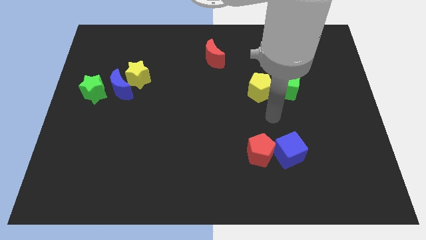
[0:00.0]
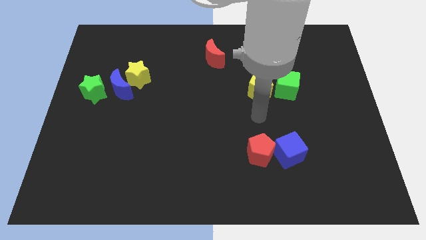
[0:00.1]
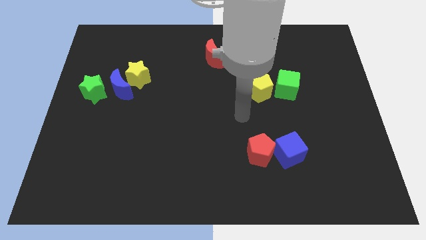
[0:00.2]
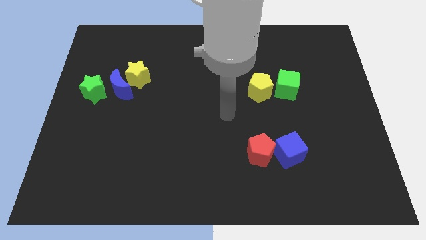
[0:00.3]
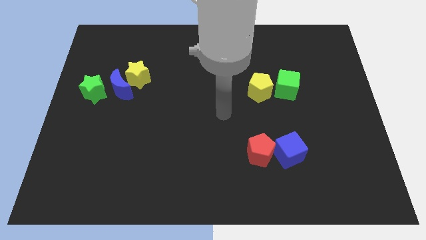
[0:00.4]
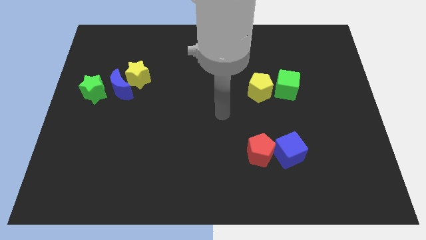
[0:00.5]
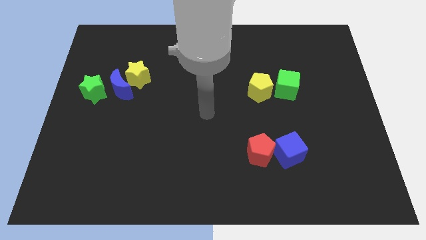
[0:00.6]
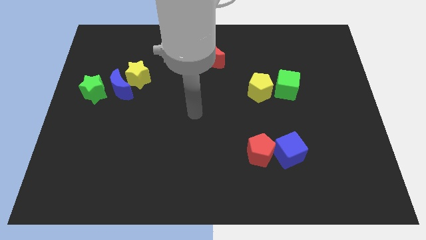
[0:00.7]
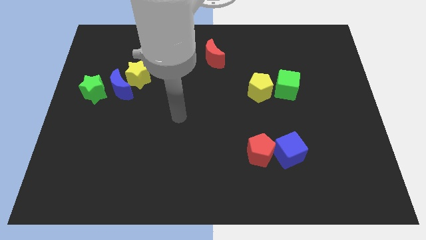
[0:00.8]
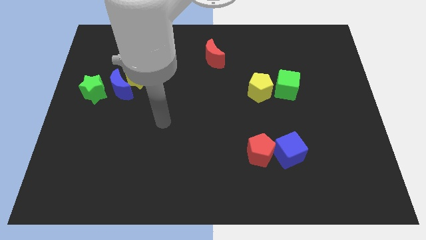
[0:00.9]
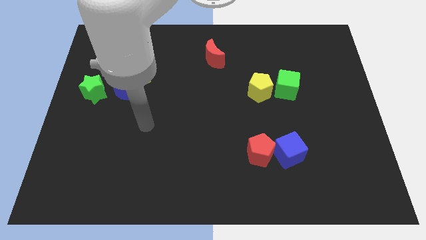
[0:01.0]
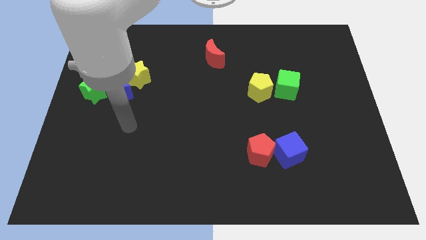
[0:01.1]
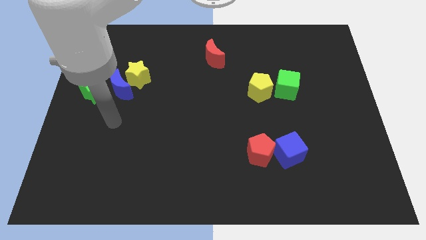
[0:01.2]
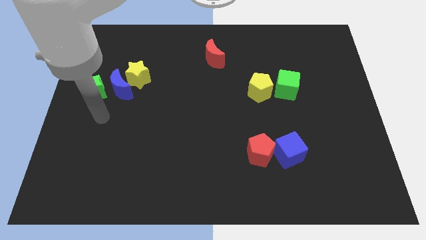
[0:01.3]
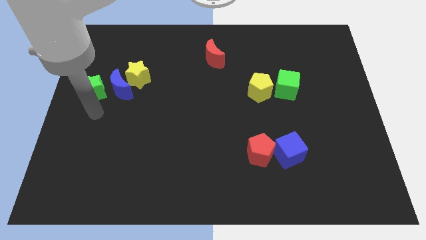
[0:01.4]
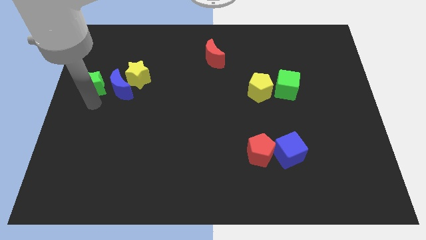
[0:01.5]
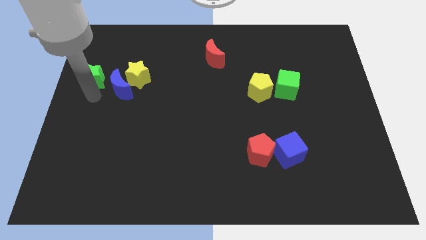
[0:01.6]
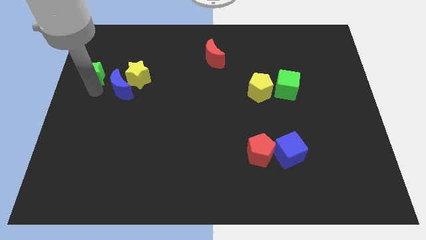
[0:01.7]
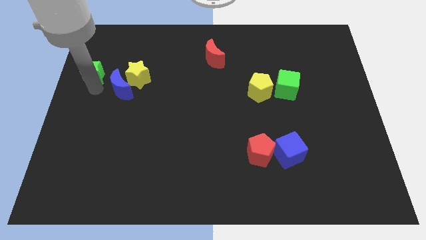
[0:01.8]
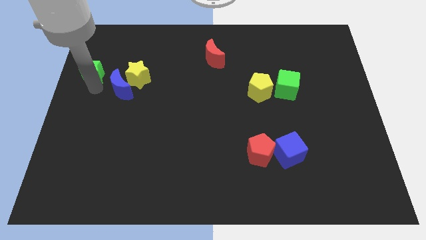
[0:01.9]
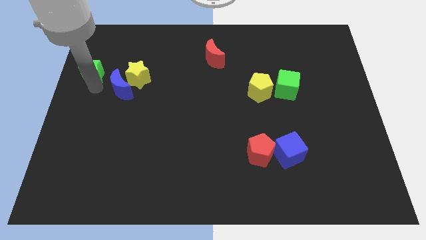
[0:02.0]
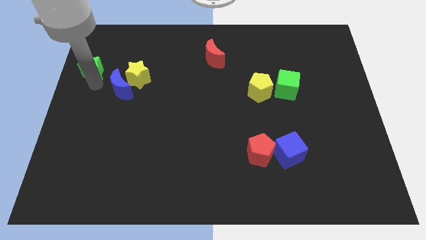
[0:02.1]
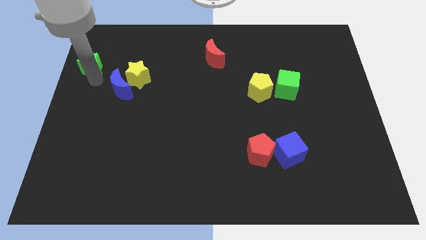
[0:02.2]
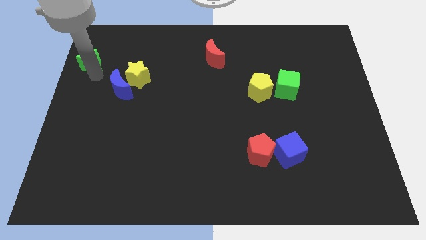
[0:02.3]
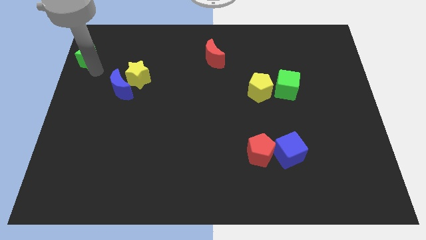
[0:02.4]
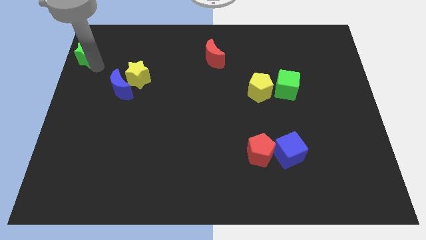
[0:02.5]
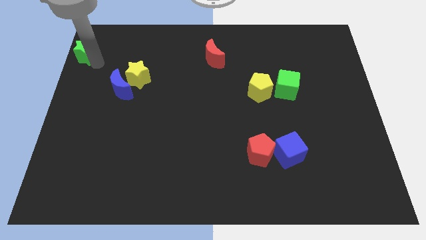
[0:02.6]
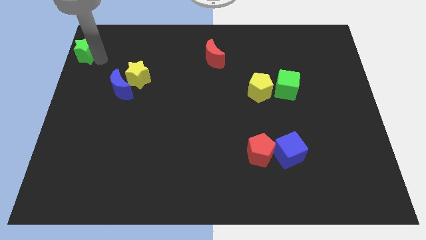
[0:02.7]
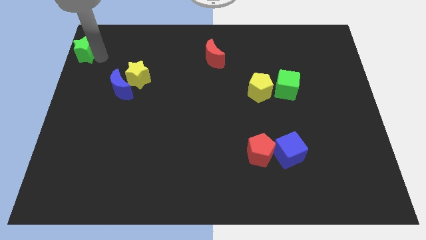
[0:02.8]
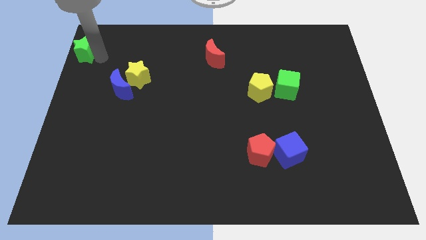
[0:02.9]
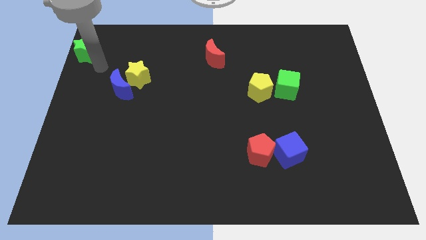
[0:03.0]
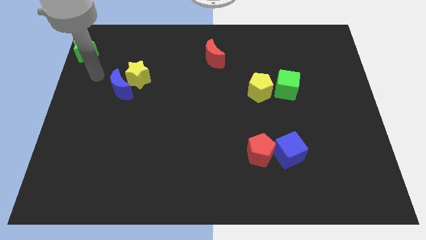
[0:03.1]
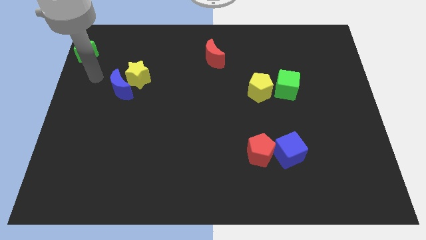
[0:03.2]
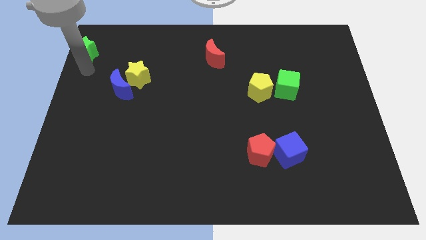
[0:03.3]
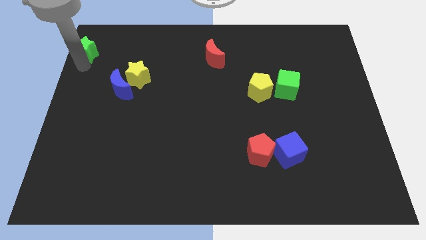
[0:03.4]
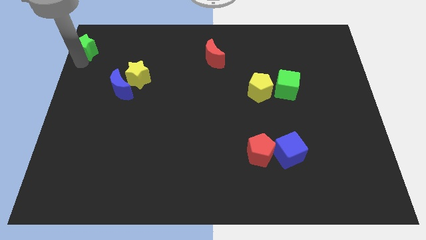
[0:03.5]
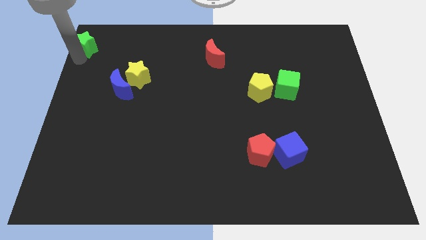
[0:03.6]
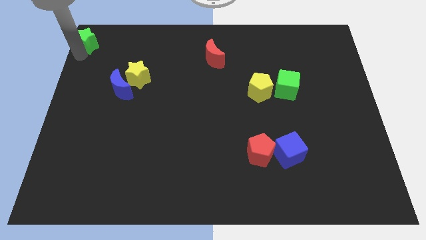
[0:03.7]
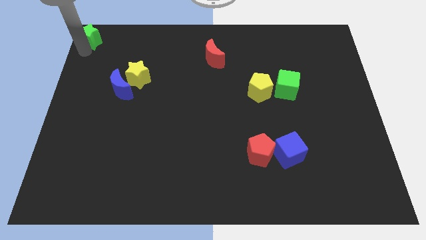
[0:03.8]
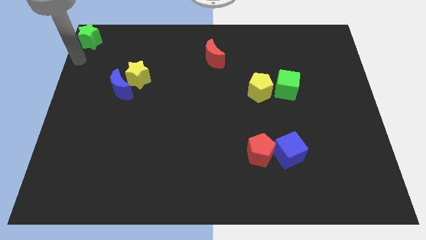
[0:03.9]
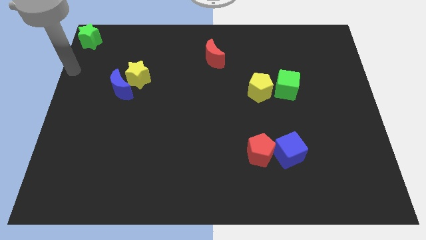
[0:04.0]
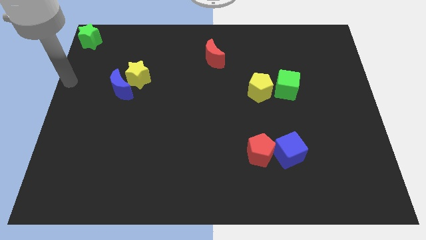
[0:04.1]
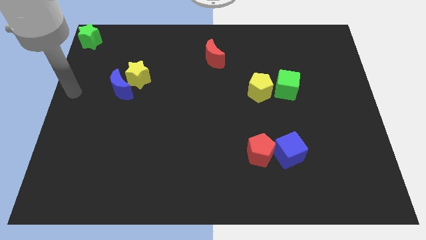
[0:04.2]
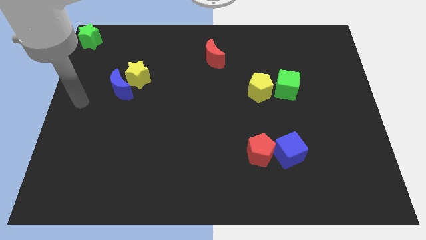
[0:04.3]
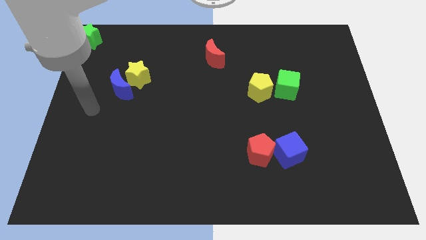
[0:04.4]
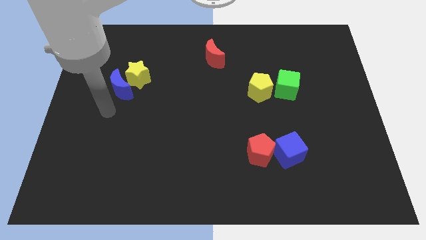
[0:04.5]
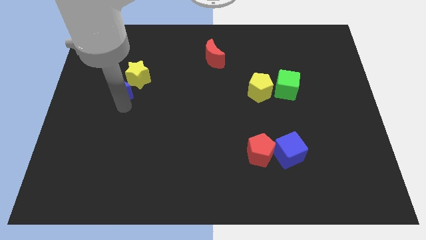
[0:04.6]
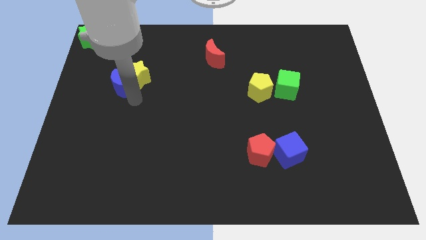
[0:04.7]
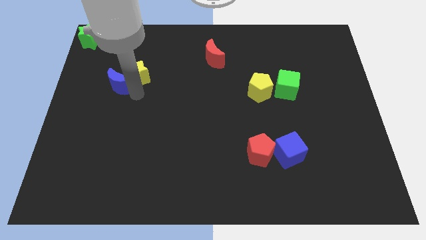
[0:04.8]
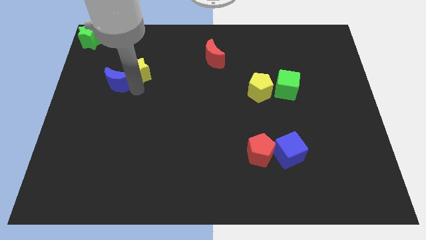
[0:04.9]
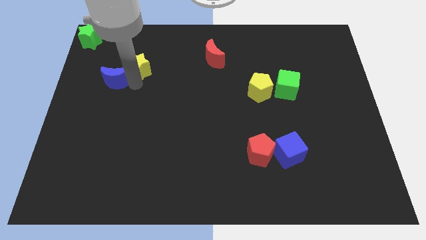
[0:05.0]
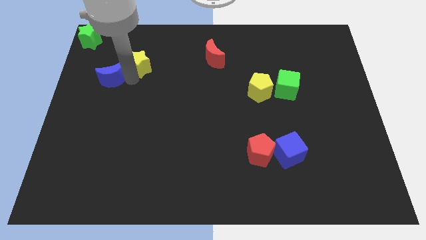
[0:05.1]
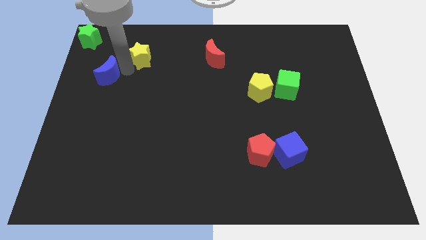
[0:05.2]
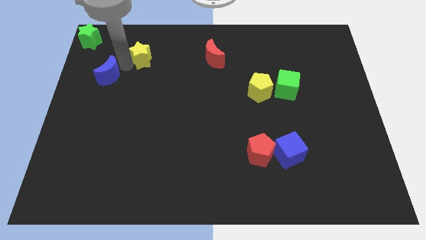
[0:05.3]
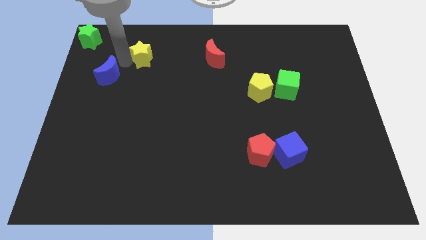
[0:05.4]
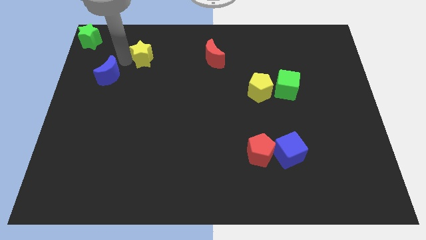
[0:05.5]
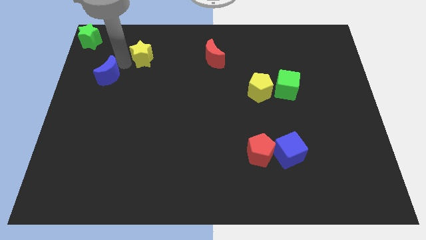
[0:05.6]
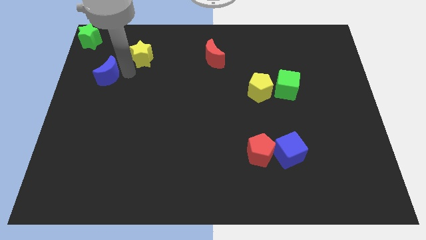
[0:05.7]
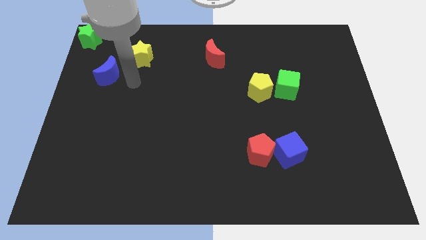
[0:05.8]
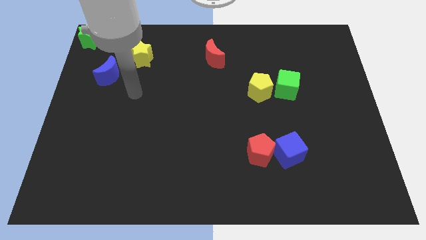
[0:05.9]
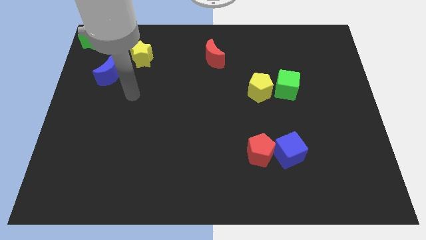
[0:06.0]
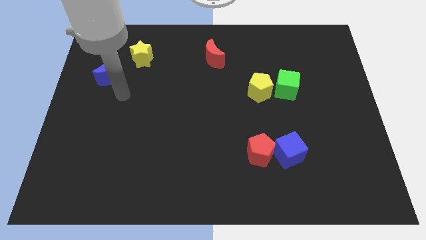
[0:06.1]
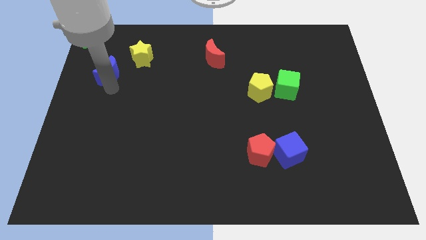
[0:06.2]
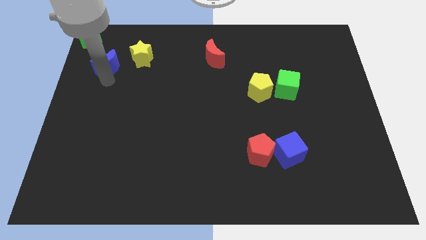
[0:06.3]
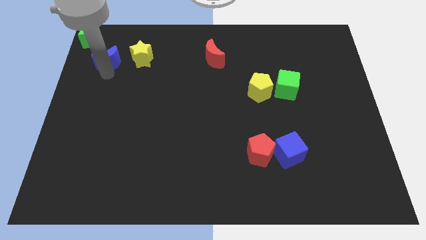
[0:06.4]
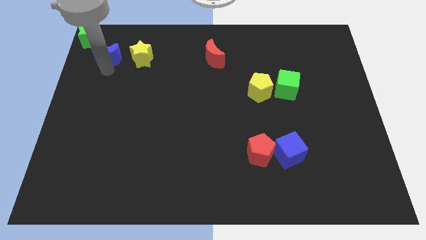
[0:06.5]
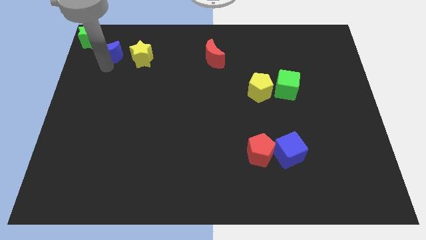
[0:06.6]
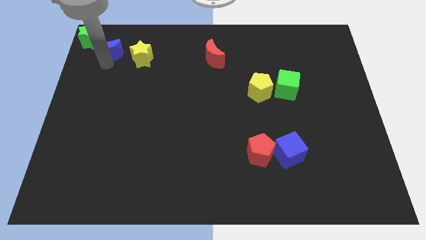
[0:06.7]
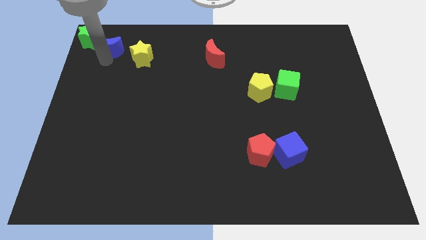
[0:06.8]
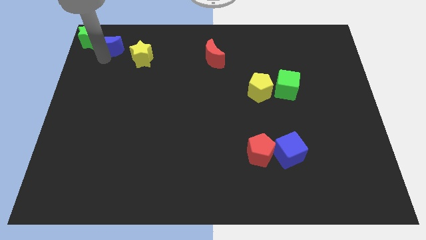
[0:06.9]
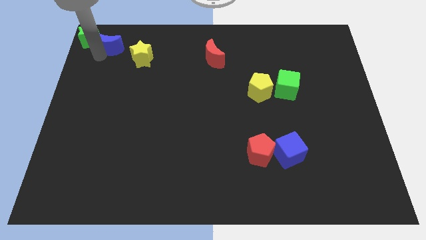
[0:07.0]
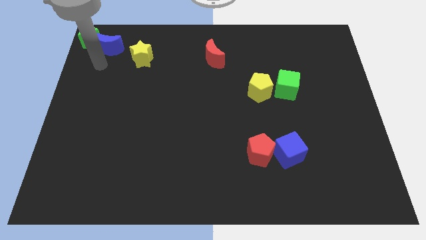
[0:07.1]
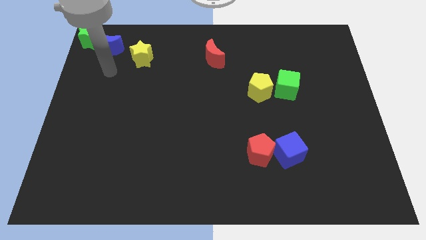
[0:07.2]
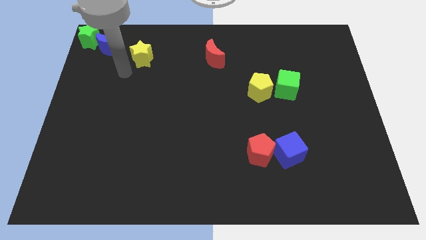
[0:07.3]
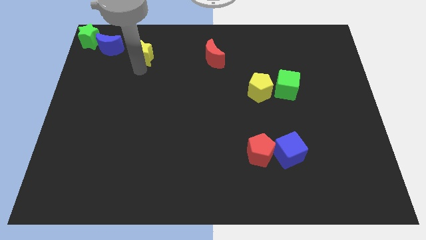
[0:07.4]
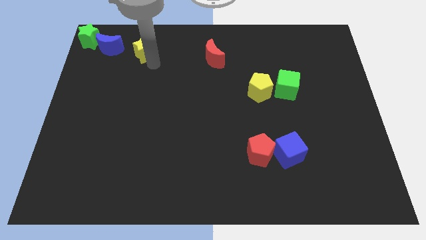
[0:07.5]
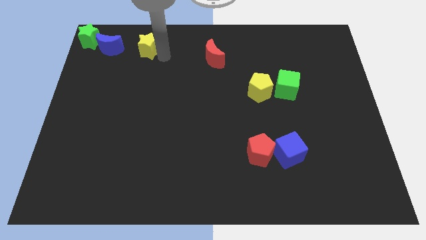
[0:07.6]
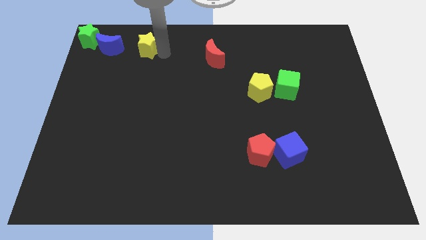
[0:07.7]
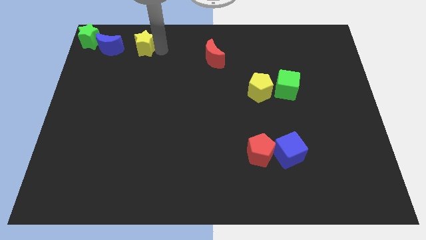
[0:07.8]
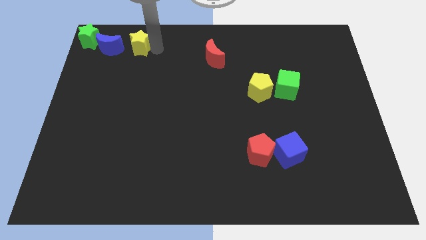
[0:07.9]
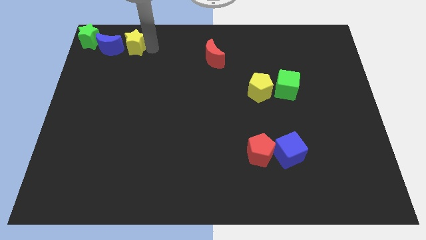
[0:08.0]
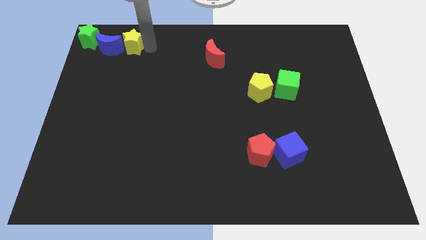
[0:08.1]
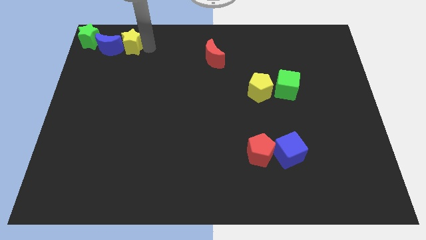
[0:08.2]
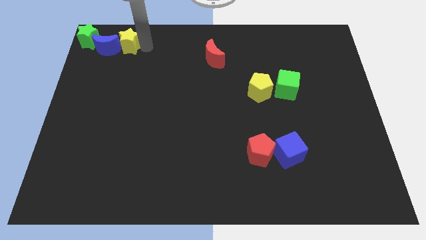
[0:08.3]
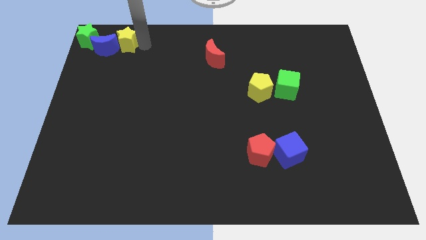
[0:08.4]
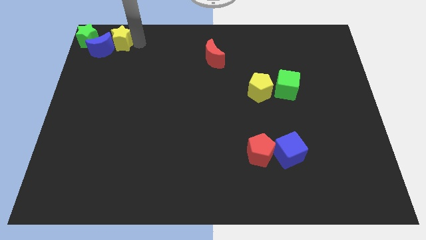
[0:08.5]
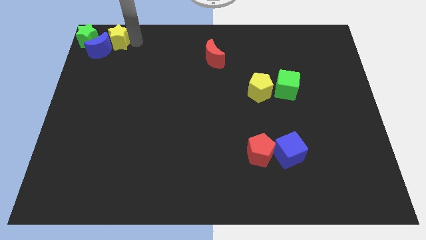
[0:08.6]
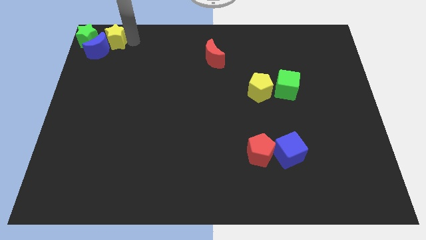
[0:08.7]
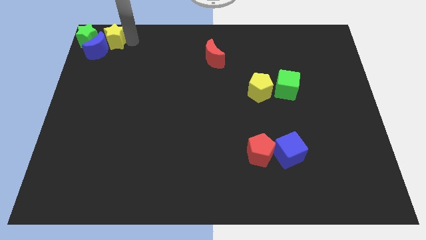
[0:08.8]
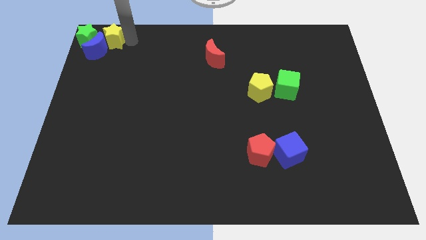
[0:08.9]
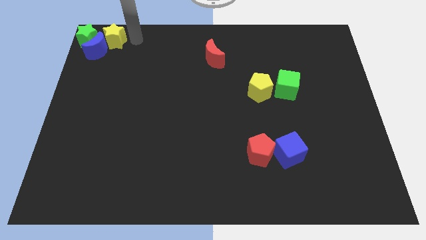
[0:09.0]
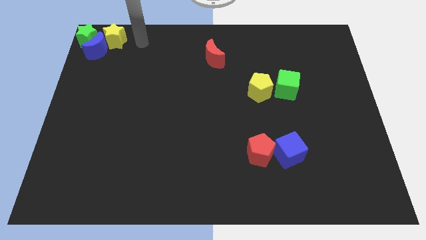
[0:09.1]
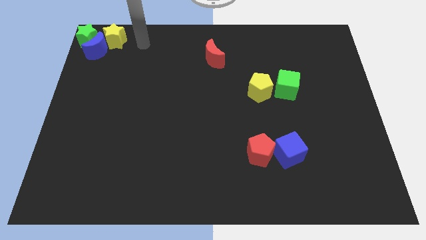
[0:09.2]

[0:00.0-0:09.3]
form a horizontal row with green star blue moon and yellow star
